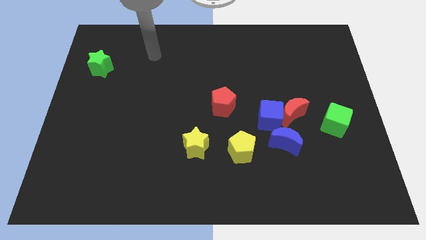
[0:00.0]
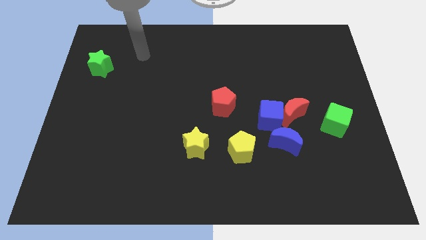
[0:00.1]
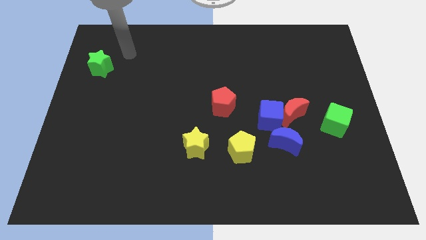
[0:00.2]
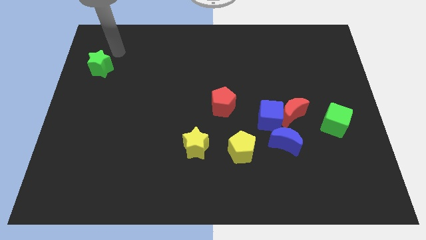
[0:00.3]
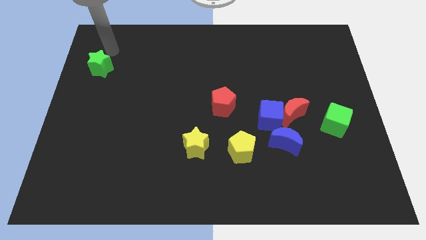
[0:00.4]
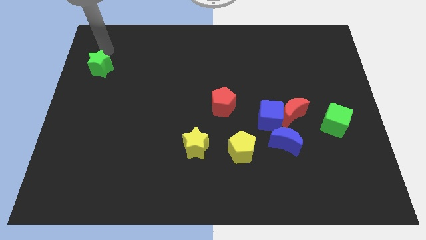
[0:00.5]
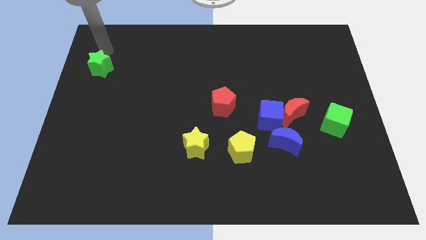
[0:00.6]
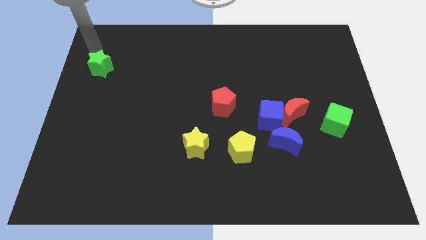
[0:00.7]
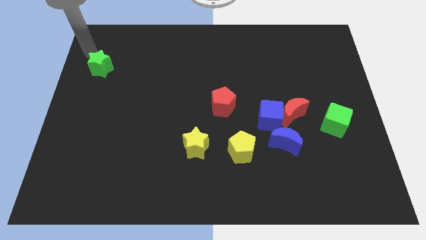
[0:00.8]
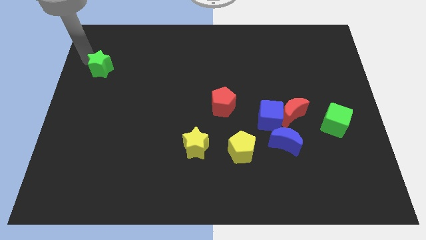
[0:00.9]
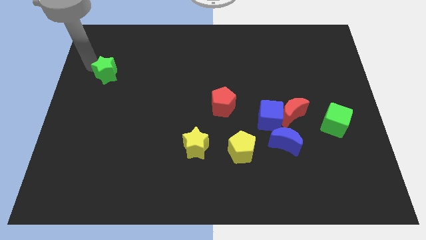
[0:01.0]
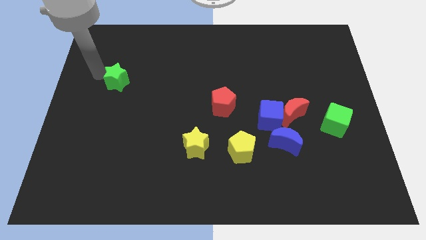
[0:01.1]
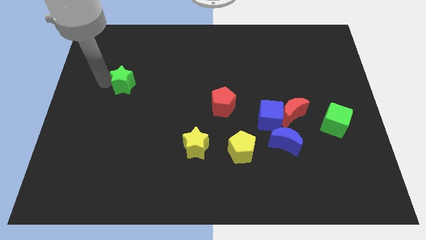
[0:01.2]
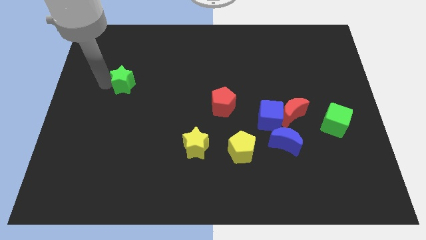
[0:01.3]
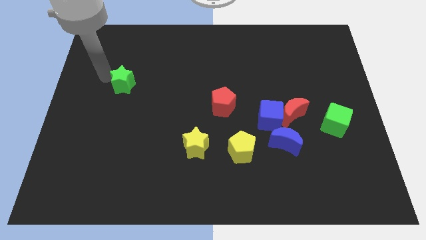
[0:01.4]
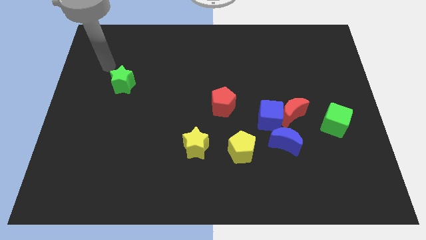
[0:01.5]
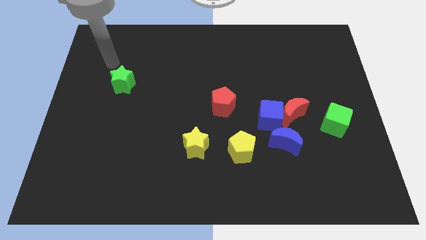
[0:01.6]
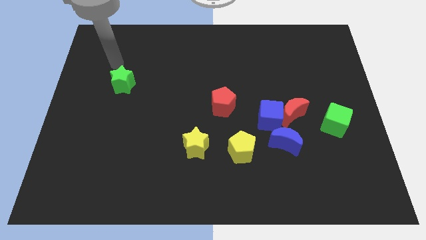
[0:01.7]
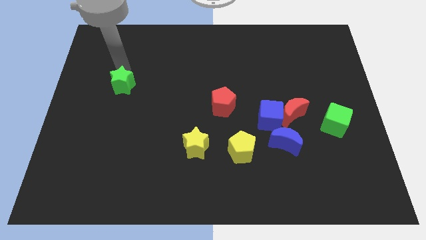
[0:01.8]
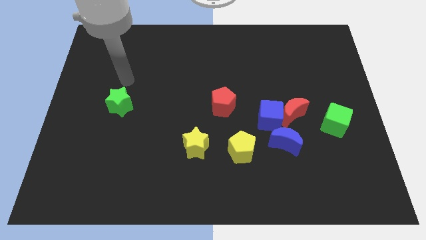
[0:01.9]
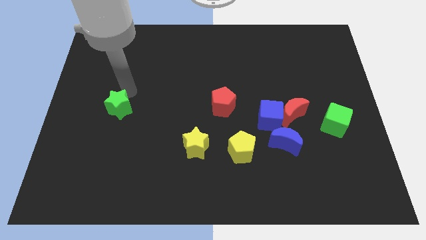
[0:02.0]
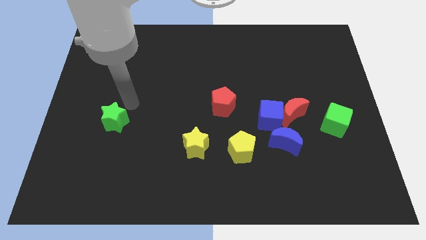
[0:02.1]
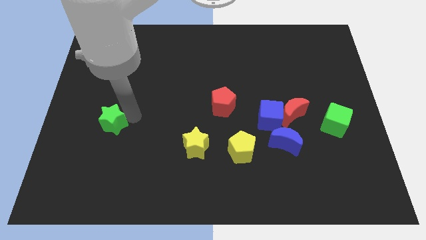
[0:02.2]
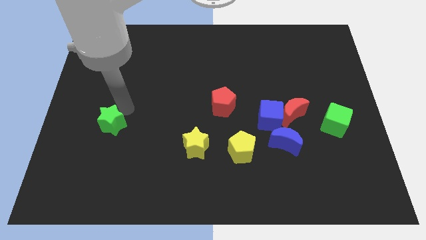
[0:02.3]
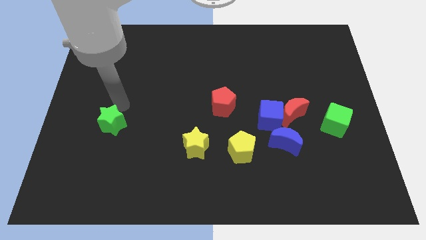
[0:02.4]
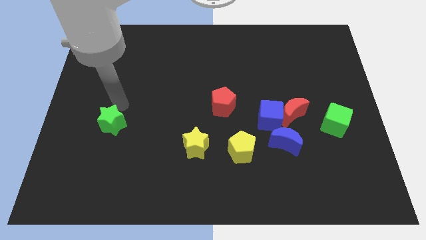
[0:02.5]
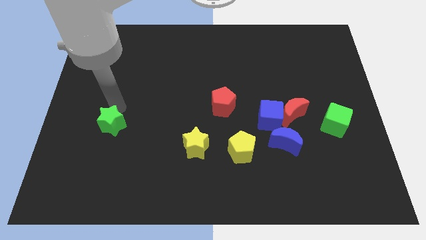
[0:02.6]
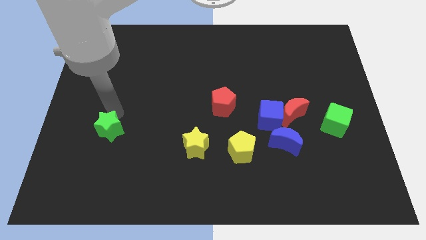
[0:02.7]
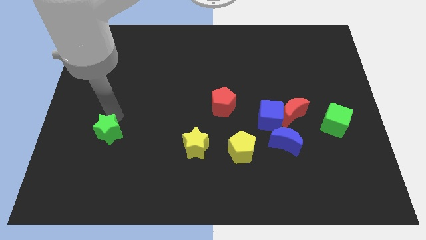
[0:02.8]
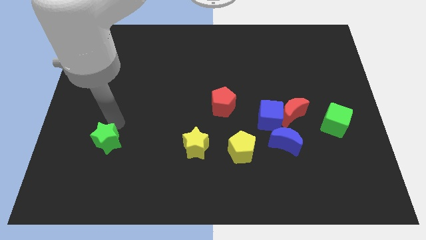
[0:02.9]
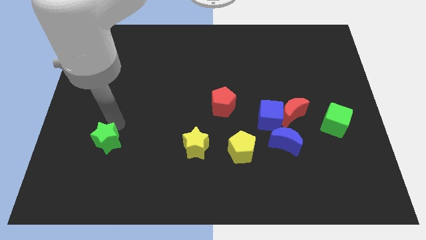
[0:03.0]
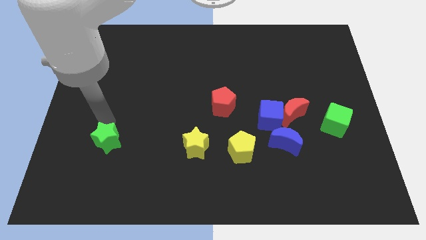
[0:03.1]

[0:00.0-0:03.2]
place the green star left to the yellow star

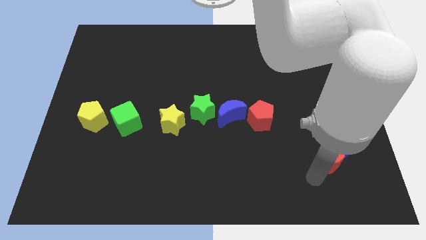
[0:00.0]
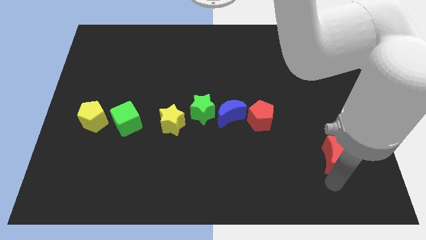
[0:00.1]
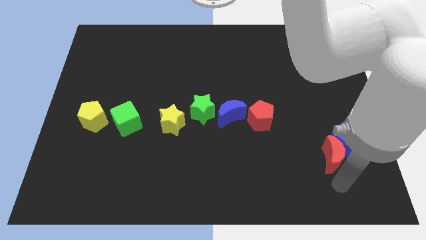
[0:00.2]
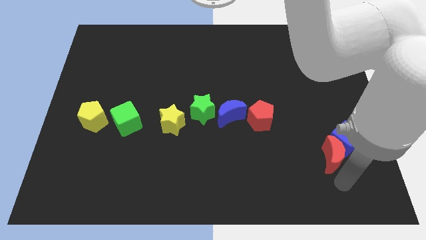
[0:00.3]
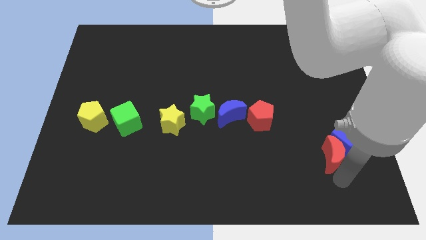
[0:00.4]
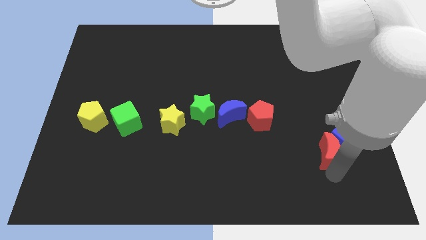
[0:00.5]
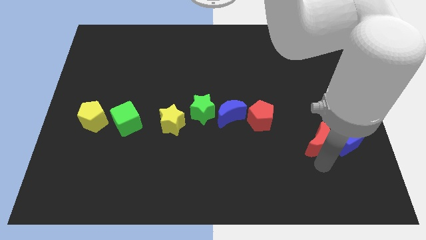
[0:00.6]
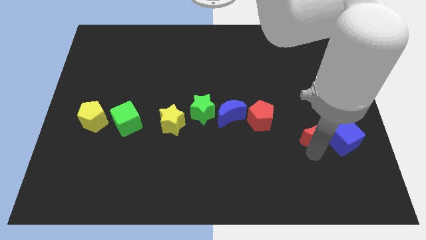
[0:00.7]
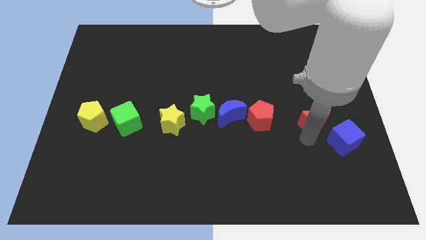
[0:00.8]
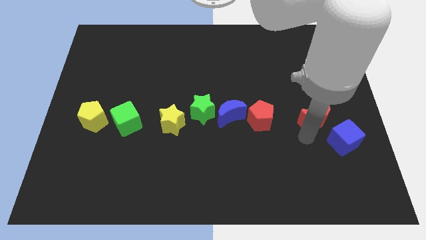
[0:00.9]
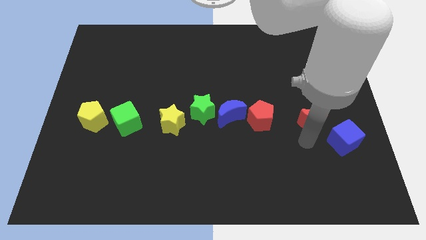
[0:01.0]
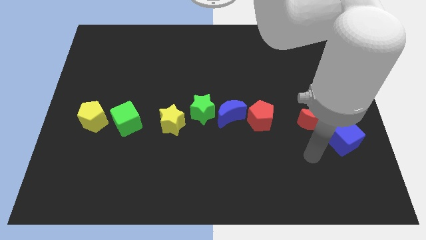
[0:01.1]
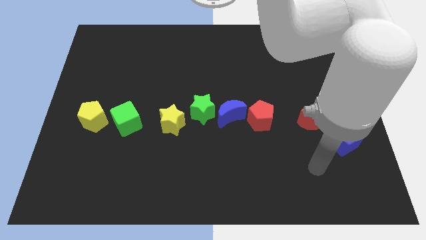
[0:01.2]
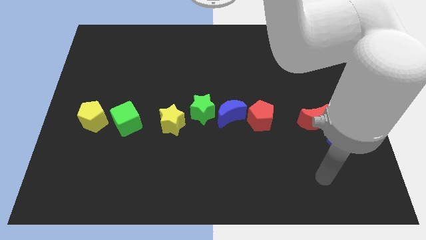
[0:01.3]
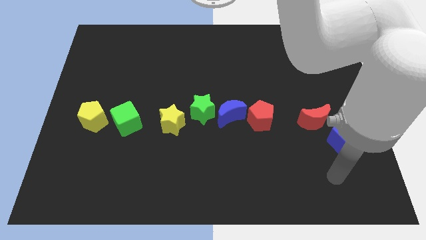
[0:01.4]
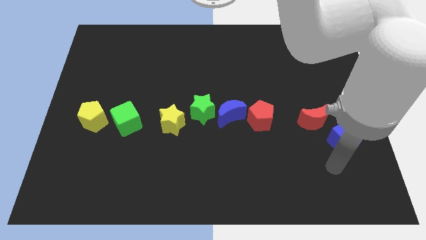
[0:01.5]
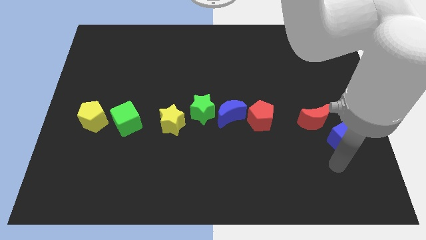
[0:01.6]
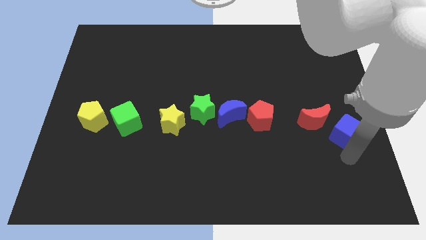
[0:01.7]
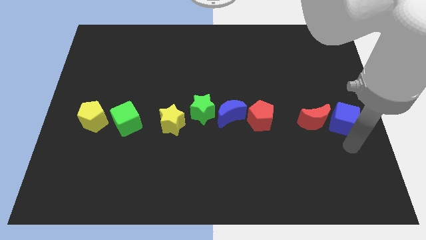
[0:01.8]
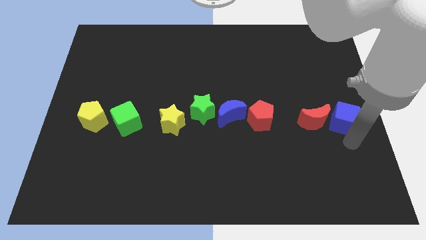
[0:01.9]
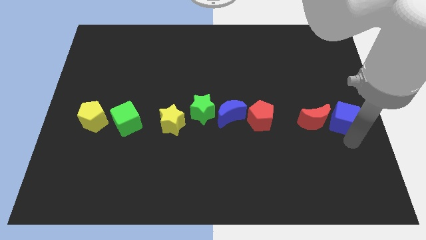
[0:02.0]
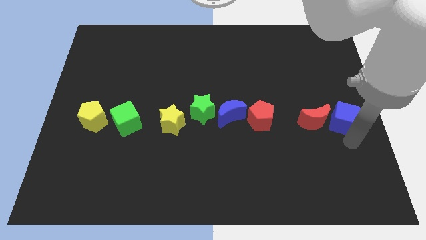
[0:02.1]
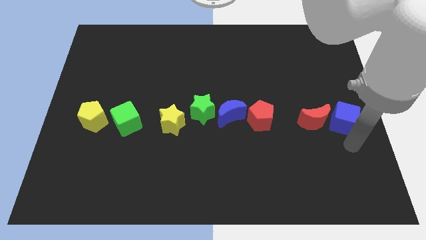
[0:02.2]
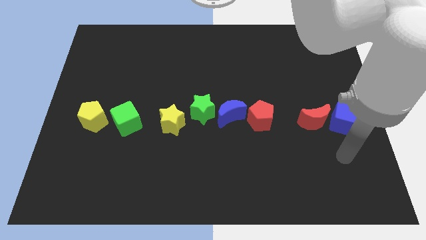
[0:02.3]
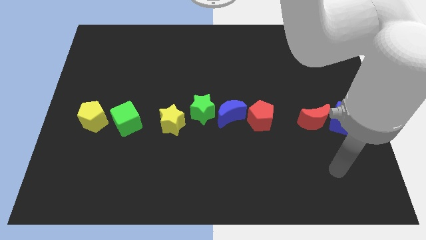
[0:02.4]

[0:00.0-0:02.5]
move the red crescent and blue cube to the right side of the red pentagon

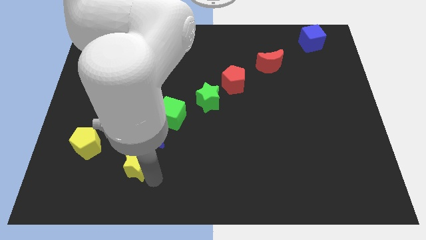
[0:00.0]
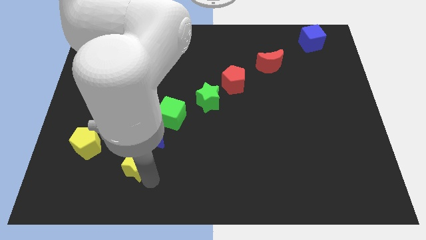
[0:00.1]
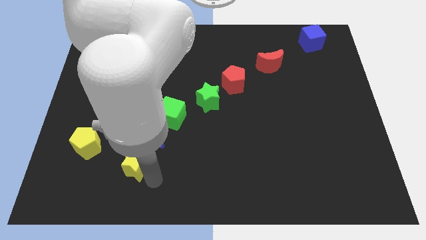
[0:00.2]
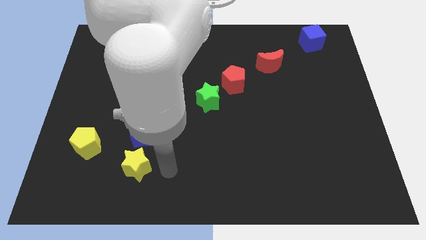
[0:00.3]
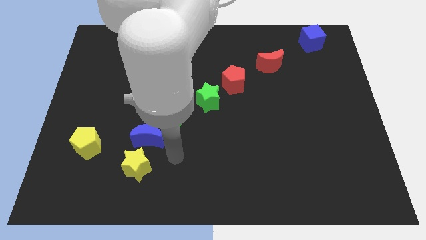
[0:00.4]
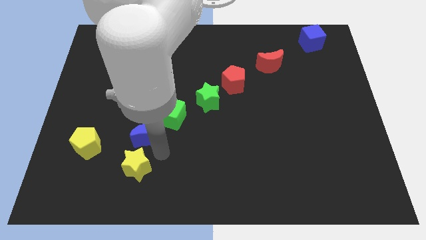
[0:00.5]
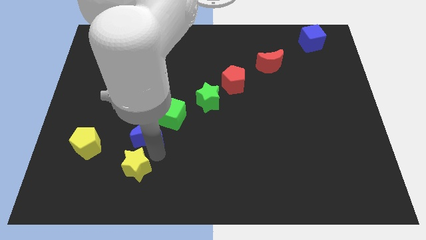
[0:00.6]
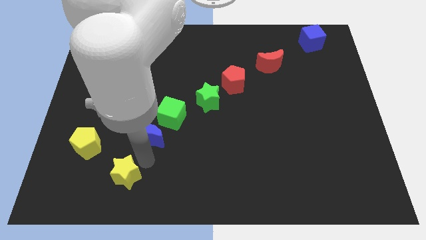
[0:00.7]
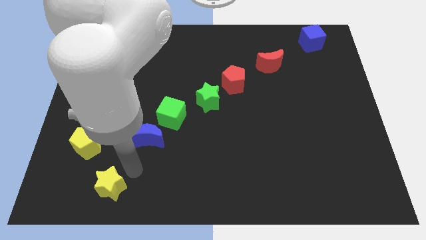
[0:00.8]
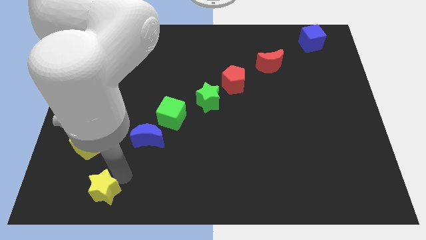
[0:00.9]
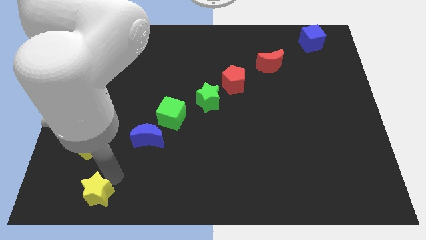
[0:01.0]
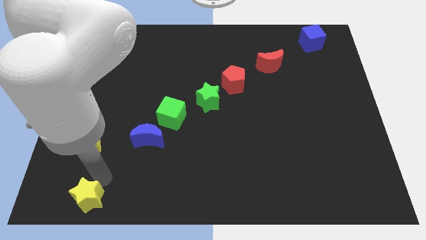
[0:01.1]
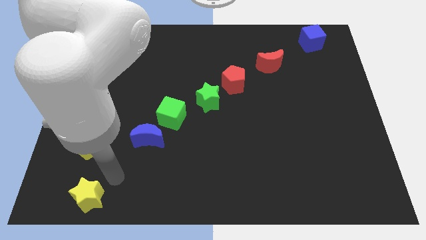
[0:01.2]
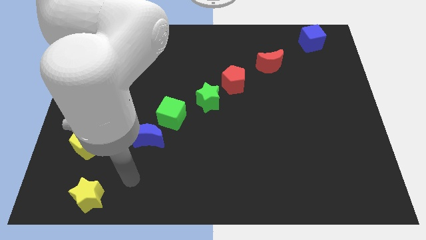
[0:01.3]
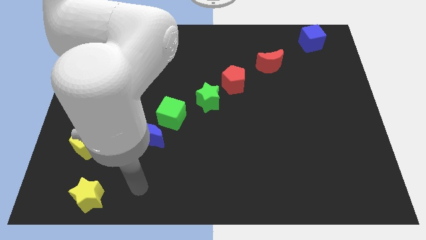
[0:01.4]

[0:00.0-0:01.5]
drag the yellow star towards the bottom left corner

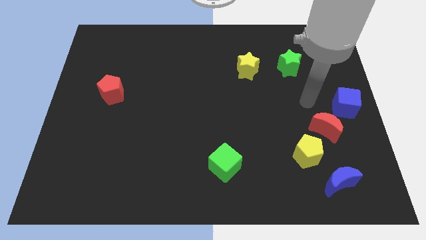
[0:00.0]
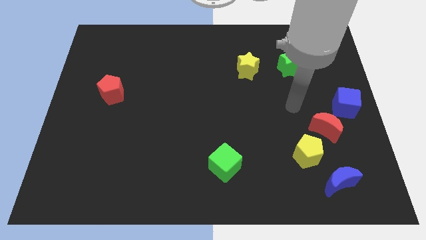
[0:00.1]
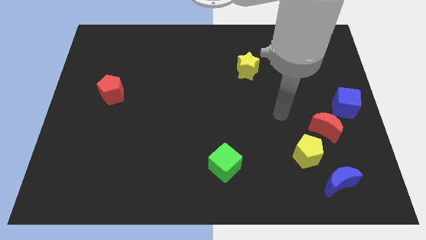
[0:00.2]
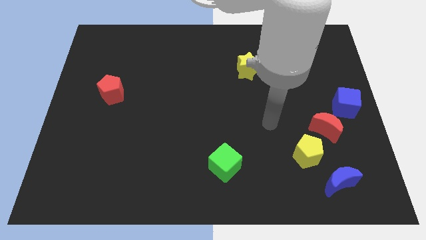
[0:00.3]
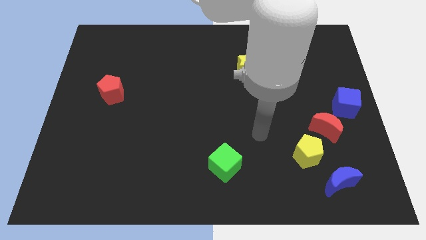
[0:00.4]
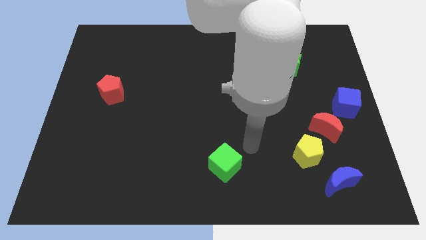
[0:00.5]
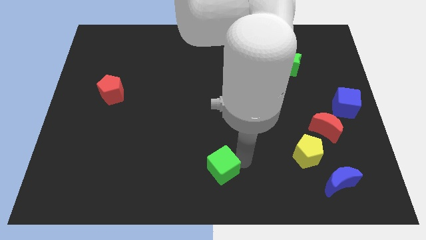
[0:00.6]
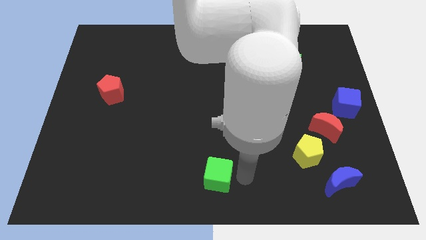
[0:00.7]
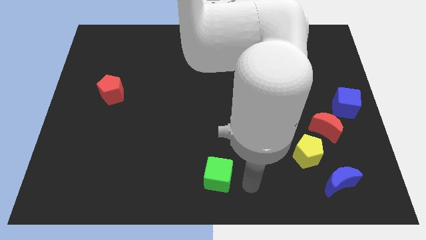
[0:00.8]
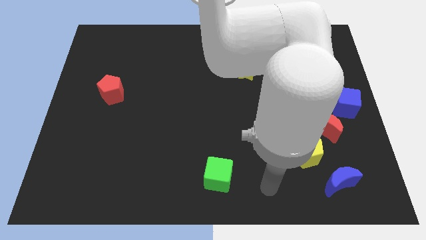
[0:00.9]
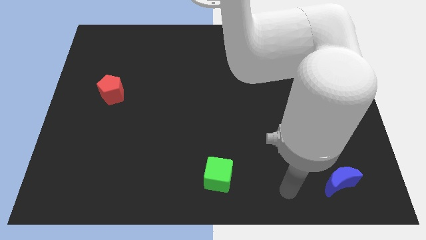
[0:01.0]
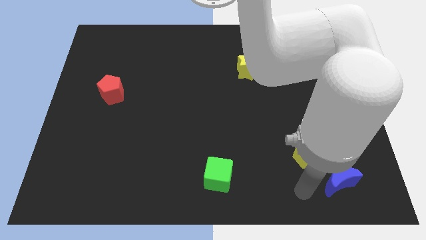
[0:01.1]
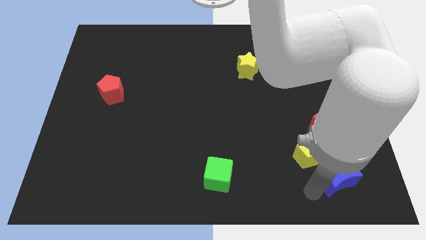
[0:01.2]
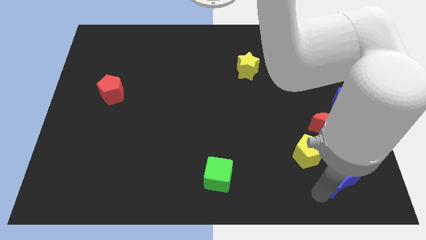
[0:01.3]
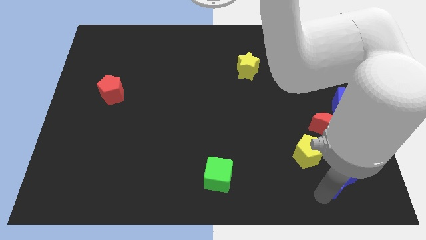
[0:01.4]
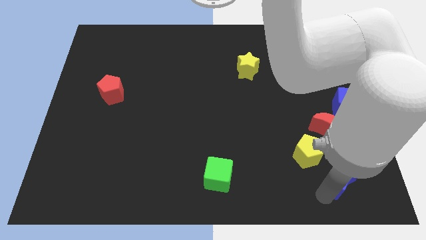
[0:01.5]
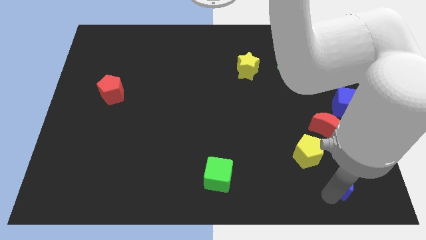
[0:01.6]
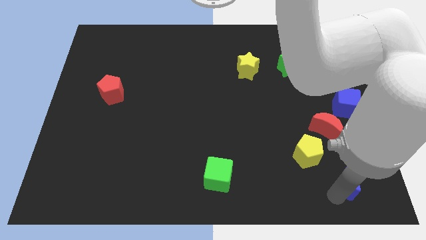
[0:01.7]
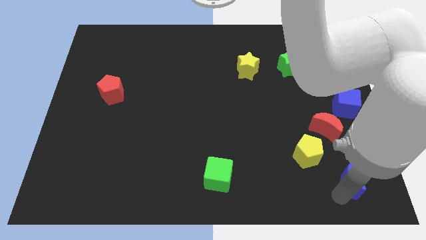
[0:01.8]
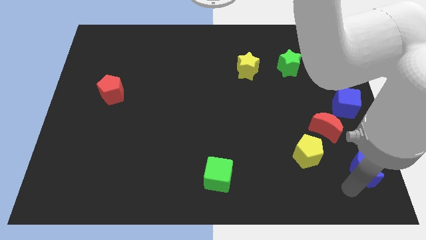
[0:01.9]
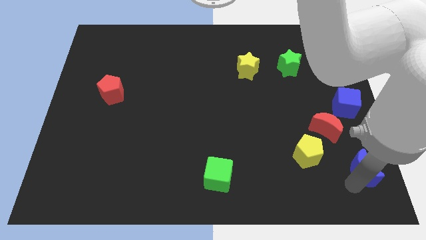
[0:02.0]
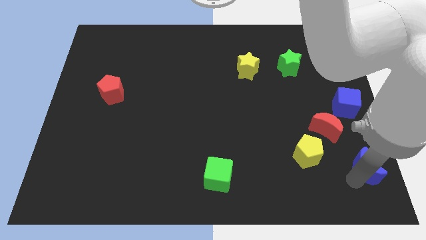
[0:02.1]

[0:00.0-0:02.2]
push blue moon towards left
